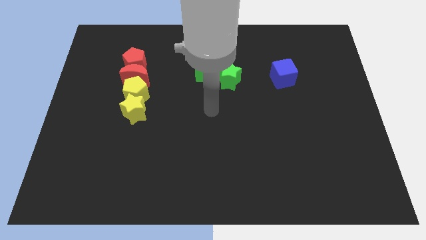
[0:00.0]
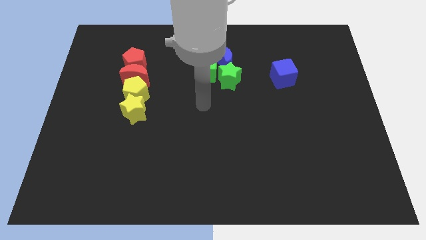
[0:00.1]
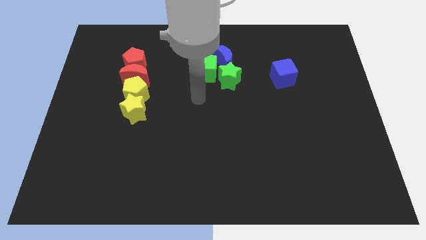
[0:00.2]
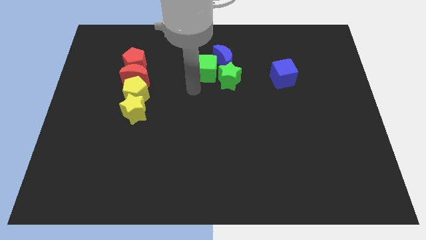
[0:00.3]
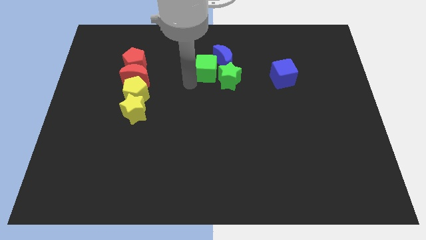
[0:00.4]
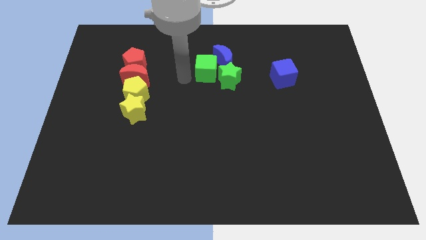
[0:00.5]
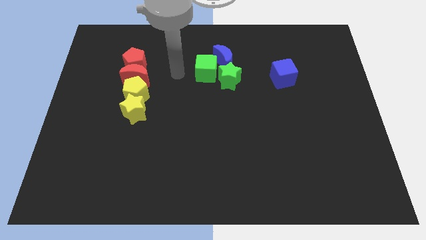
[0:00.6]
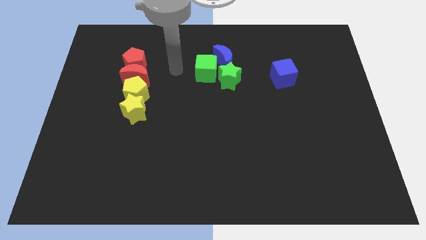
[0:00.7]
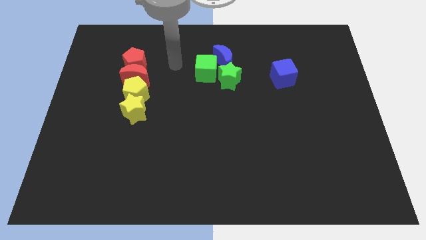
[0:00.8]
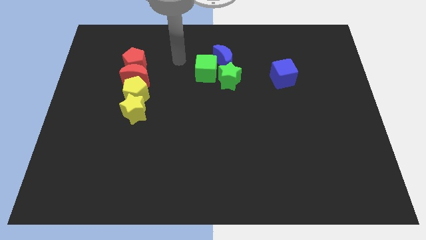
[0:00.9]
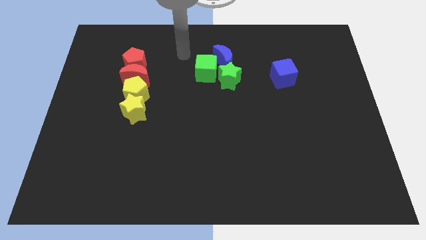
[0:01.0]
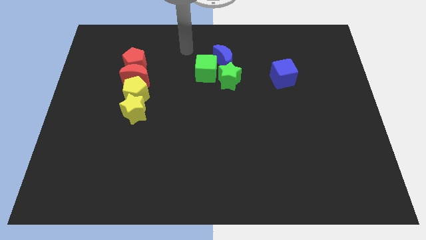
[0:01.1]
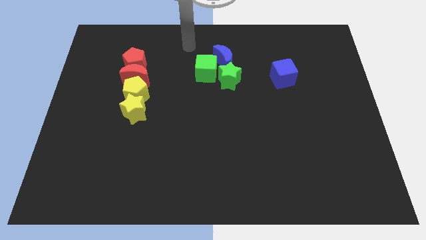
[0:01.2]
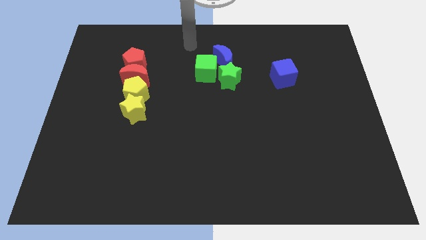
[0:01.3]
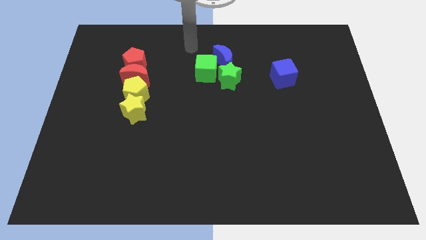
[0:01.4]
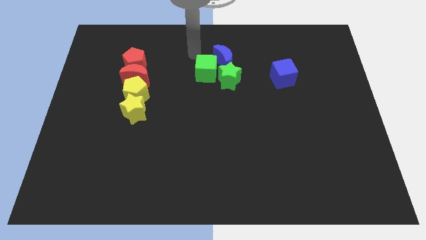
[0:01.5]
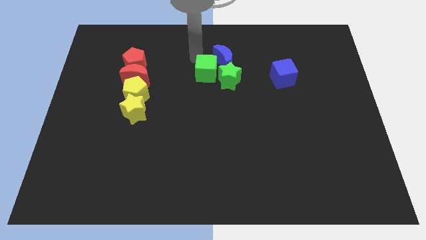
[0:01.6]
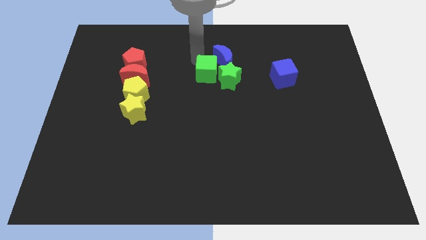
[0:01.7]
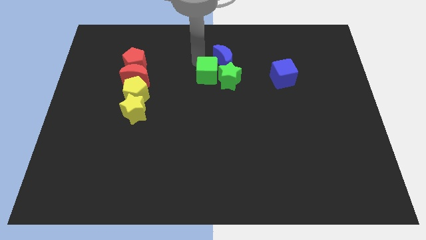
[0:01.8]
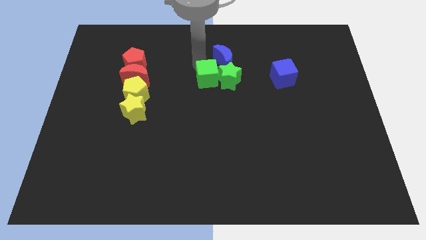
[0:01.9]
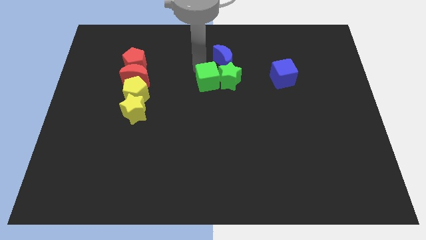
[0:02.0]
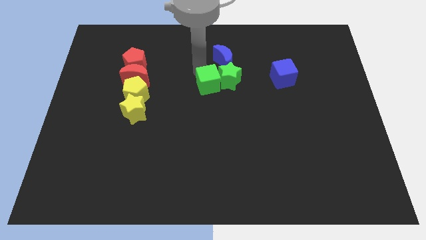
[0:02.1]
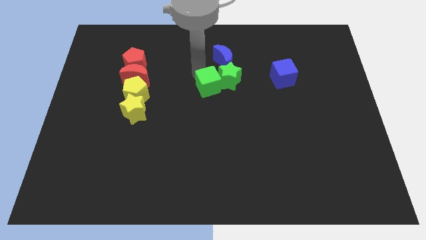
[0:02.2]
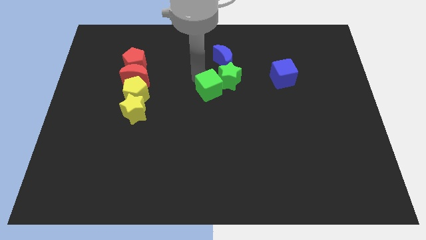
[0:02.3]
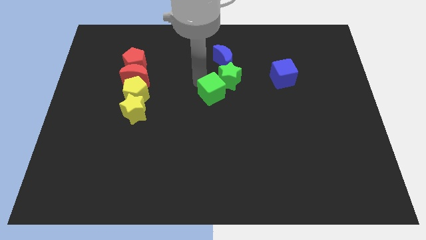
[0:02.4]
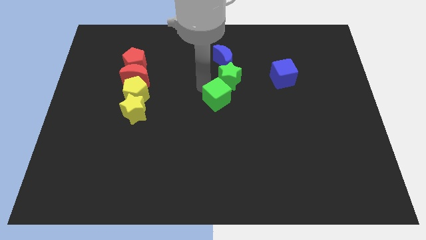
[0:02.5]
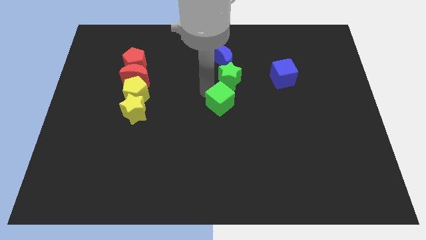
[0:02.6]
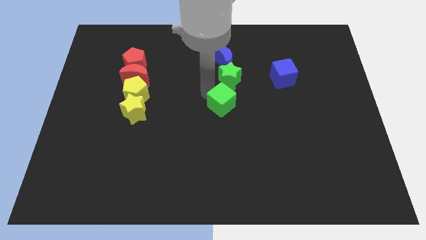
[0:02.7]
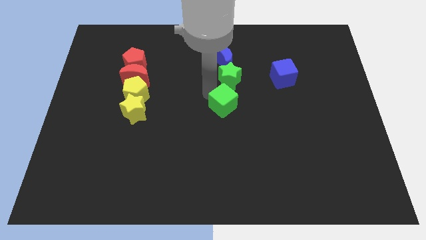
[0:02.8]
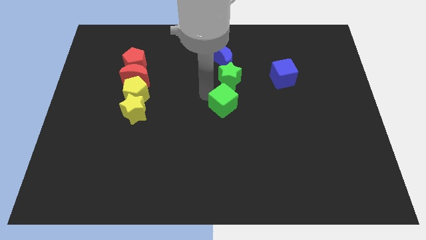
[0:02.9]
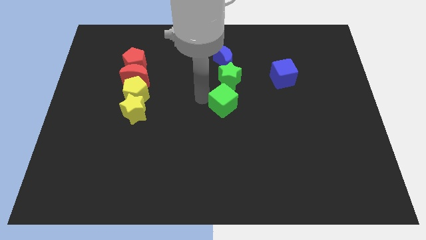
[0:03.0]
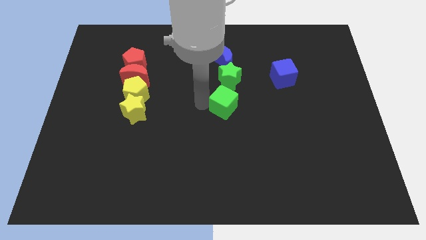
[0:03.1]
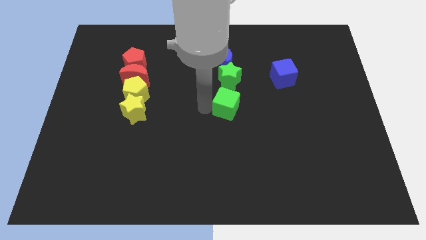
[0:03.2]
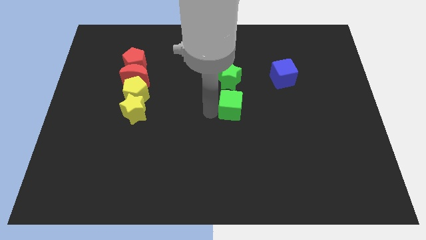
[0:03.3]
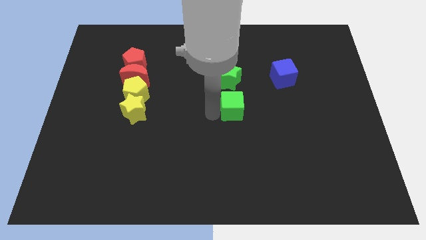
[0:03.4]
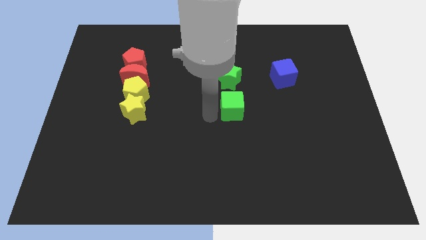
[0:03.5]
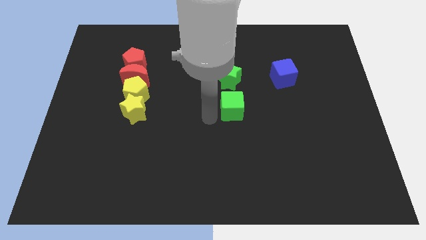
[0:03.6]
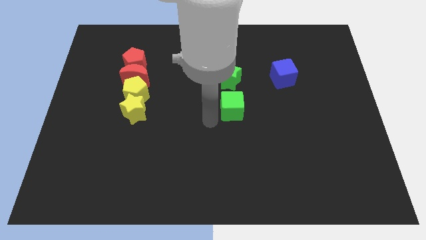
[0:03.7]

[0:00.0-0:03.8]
move the green cube right to the yellow star

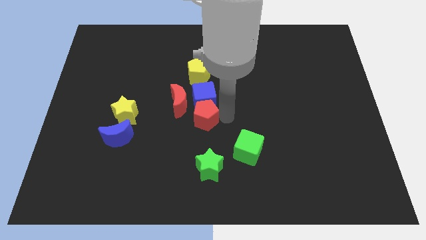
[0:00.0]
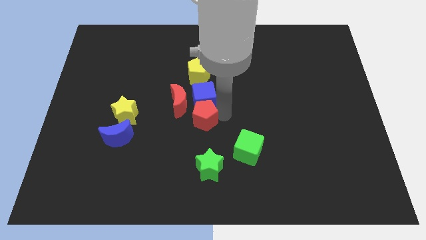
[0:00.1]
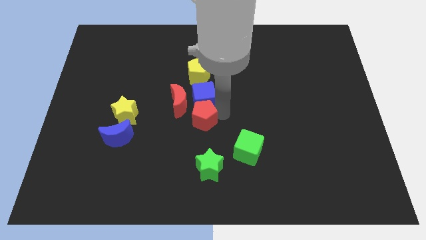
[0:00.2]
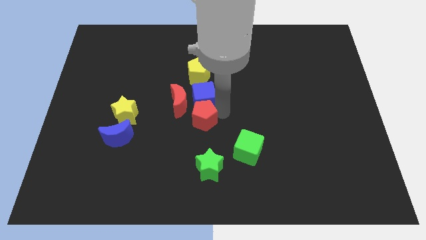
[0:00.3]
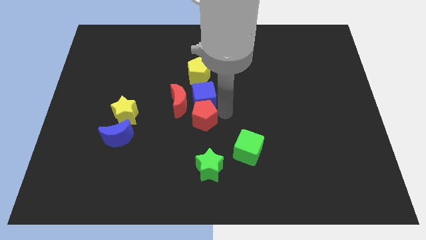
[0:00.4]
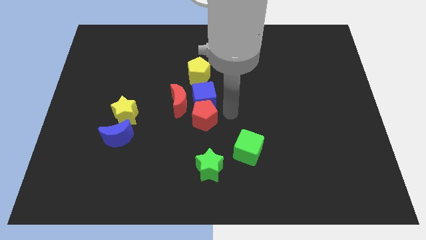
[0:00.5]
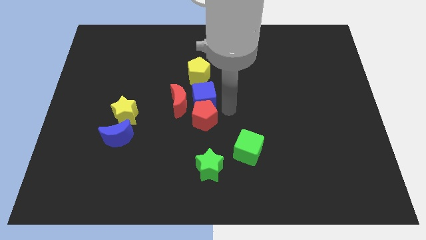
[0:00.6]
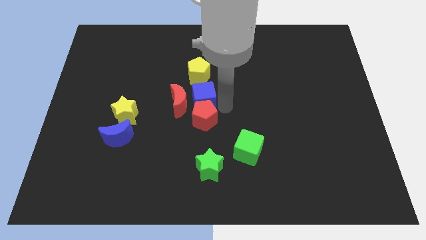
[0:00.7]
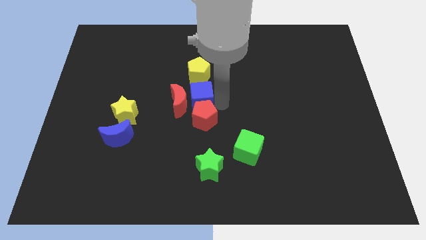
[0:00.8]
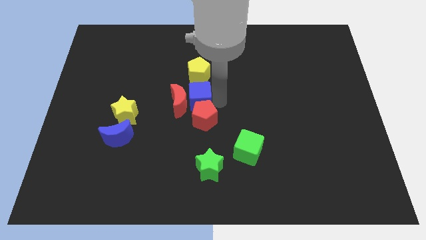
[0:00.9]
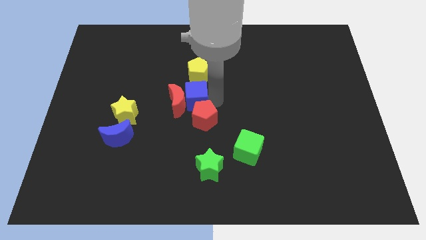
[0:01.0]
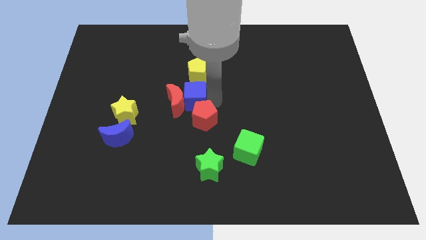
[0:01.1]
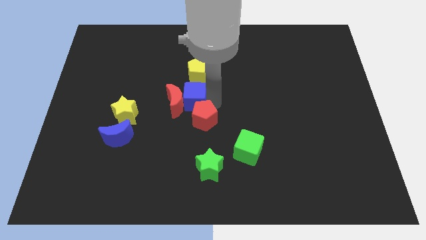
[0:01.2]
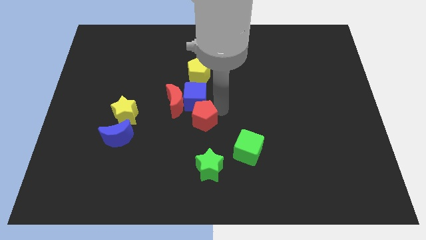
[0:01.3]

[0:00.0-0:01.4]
slightly move the red crescent using the blue cube

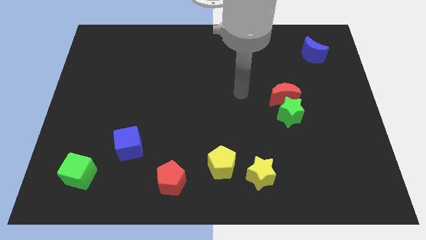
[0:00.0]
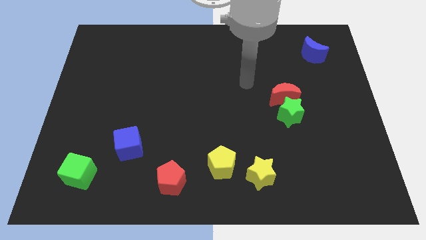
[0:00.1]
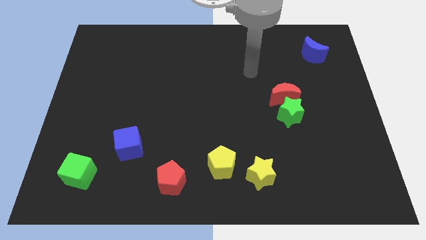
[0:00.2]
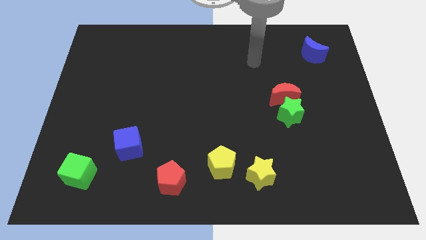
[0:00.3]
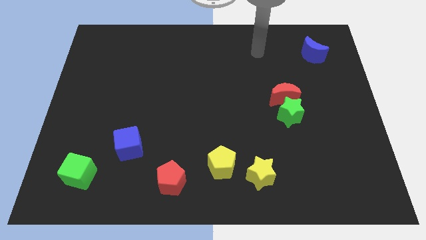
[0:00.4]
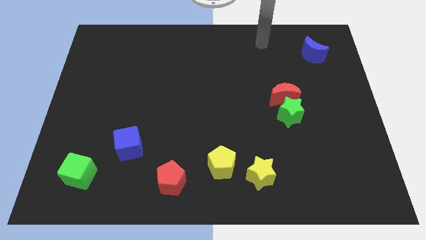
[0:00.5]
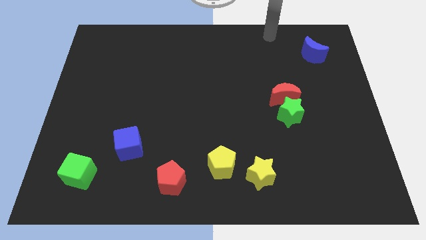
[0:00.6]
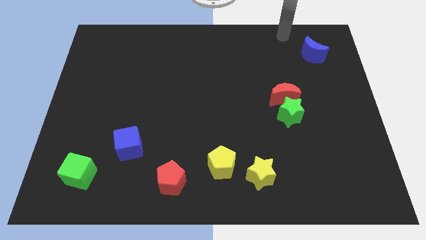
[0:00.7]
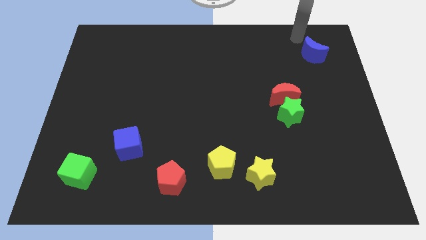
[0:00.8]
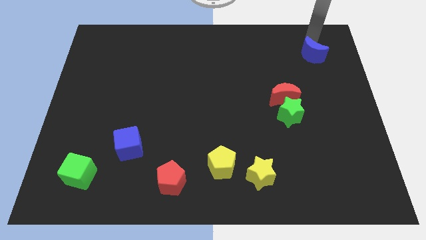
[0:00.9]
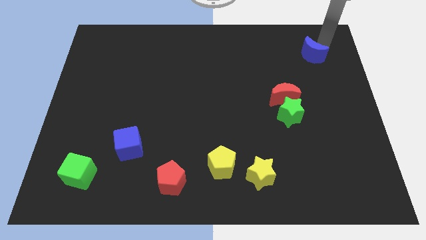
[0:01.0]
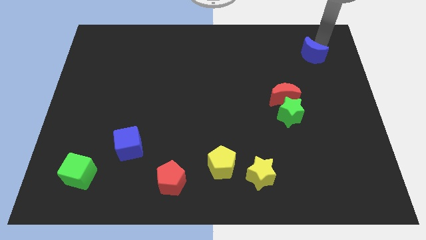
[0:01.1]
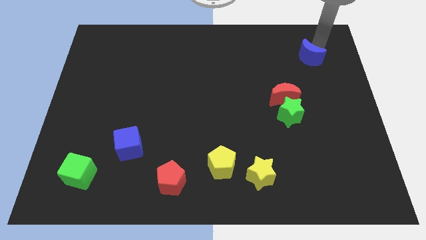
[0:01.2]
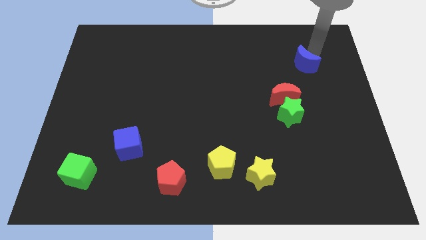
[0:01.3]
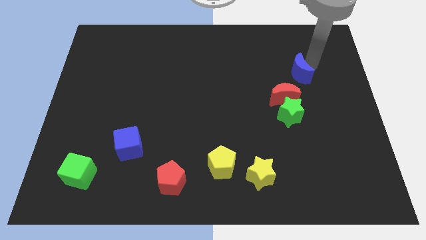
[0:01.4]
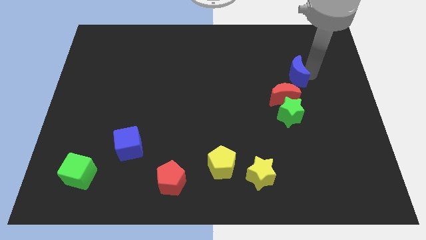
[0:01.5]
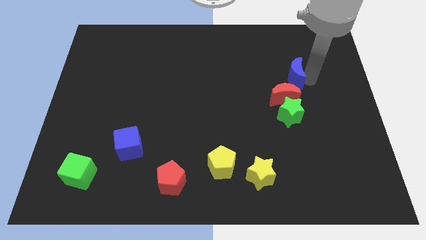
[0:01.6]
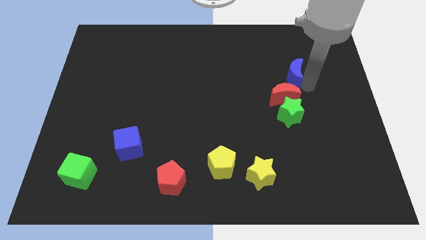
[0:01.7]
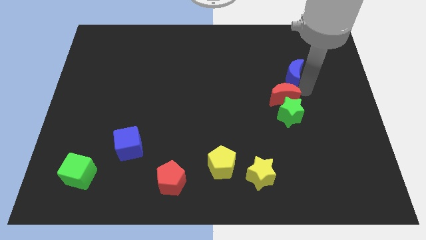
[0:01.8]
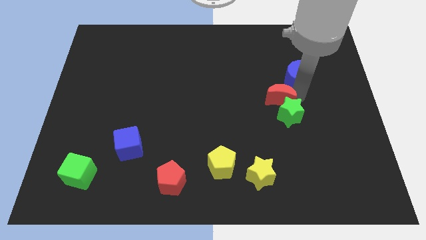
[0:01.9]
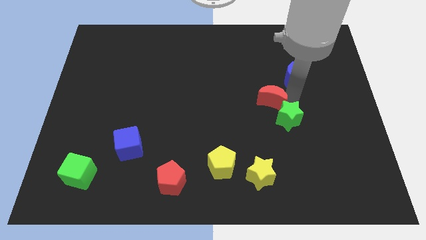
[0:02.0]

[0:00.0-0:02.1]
place blue crescent near to red crescent

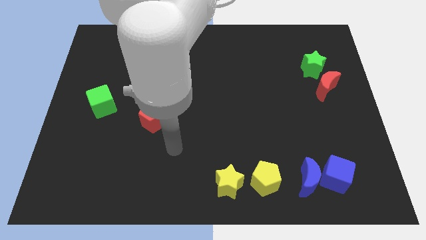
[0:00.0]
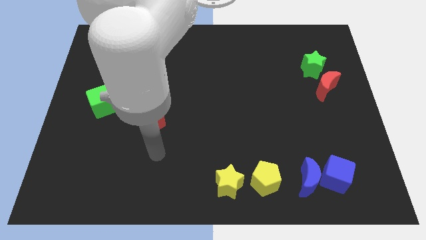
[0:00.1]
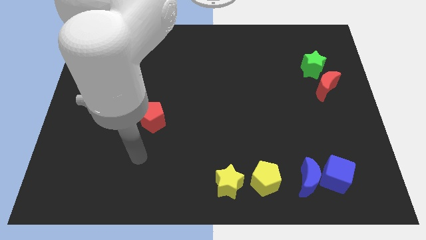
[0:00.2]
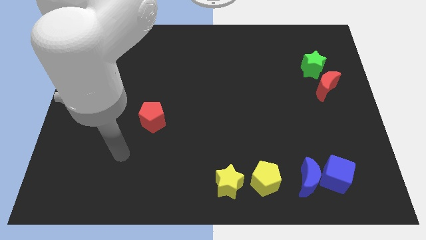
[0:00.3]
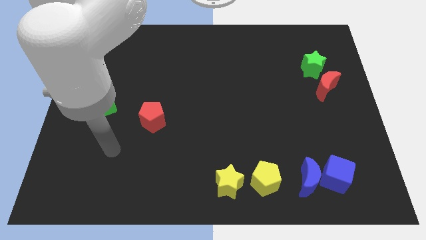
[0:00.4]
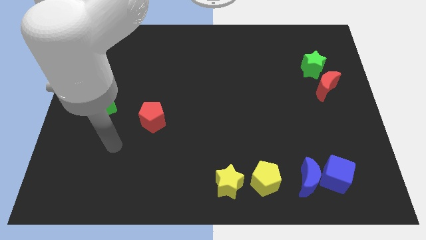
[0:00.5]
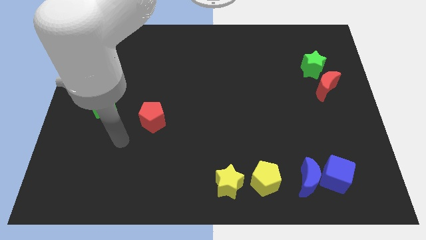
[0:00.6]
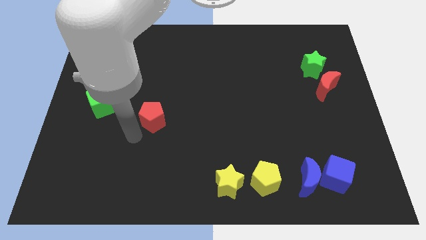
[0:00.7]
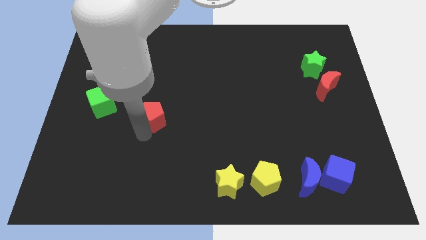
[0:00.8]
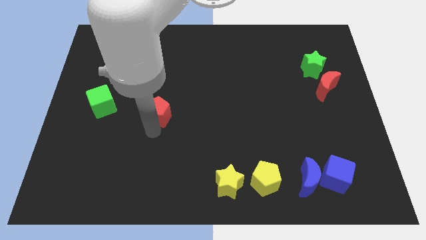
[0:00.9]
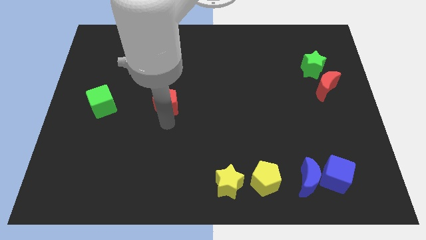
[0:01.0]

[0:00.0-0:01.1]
touch the bottom of red pentagon

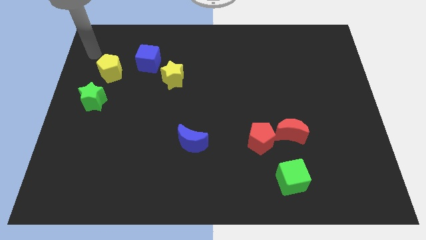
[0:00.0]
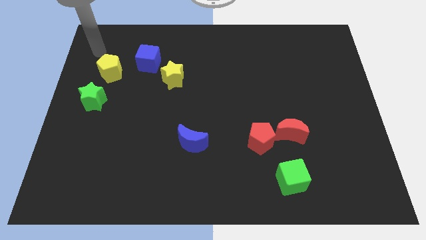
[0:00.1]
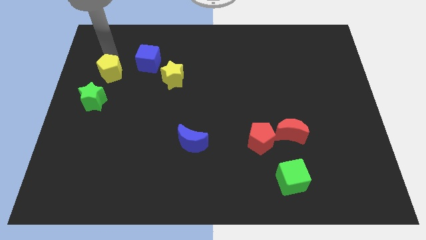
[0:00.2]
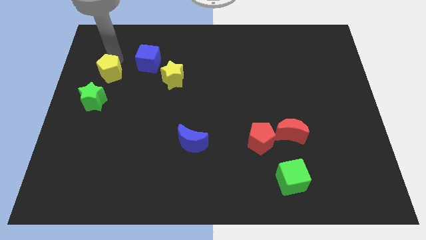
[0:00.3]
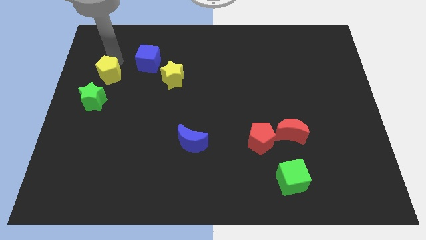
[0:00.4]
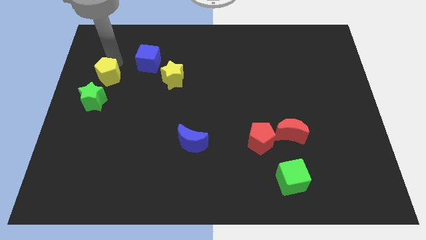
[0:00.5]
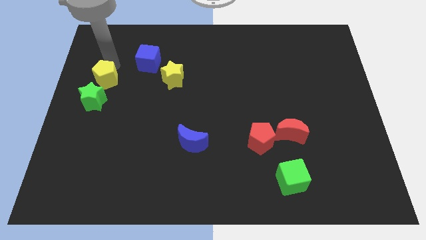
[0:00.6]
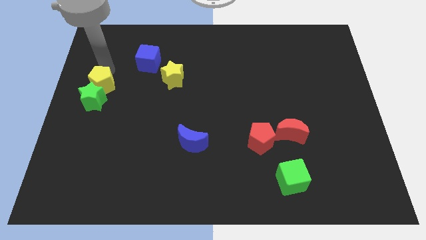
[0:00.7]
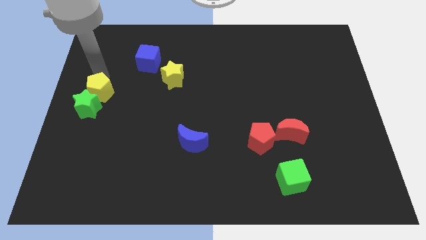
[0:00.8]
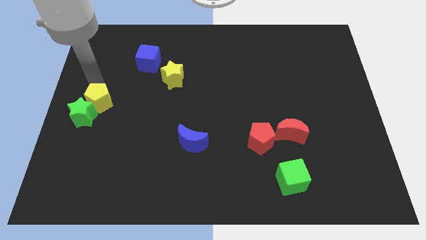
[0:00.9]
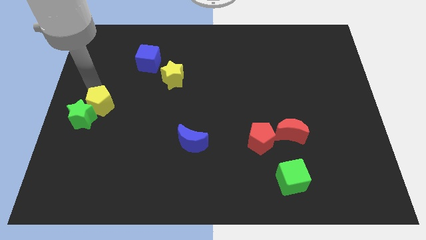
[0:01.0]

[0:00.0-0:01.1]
push the yellow pentagon into the green star
